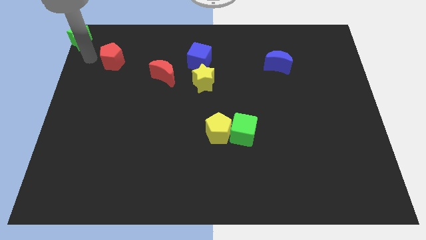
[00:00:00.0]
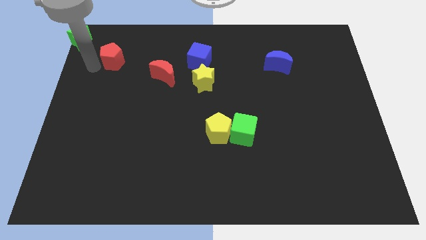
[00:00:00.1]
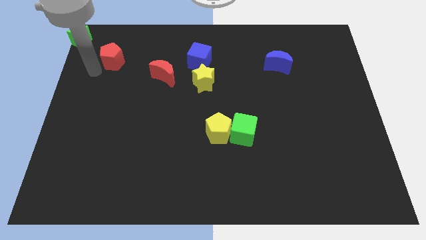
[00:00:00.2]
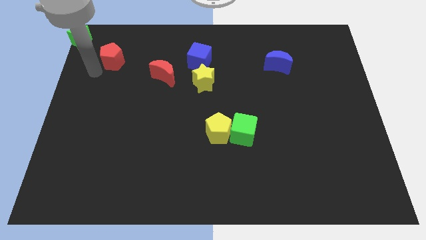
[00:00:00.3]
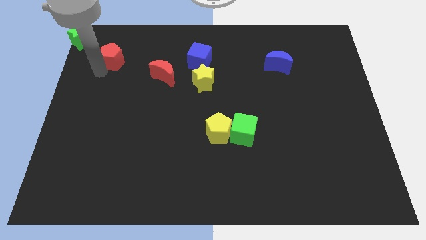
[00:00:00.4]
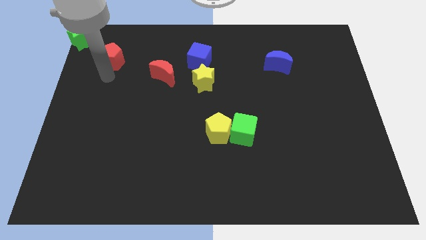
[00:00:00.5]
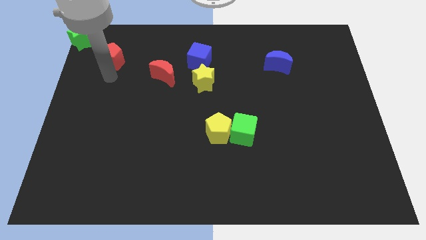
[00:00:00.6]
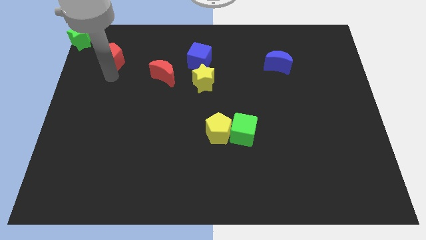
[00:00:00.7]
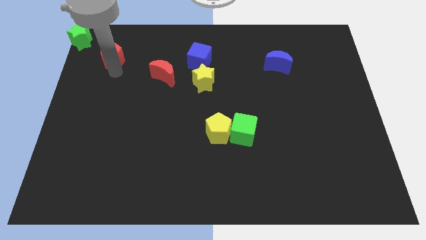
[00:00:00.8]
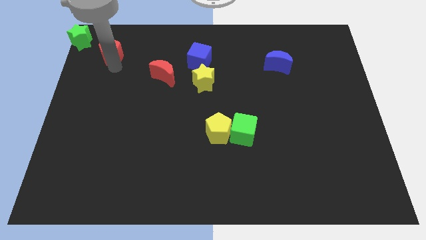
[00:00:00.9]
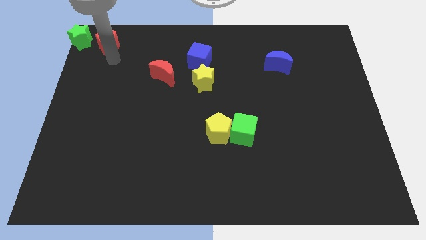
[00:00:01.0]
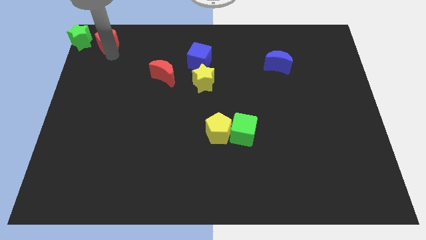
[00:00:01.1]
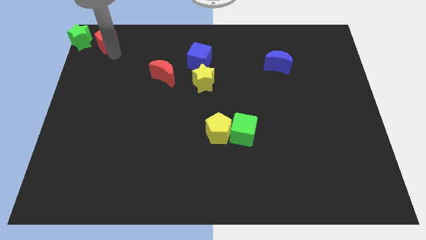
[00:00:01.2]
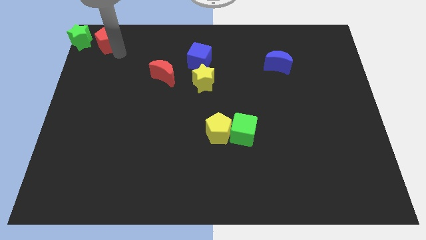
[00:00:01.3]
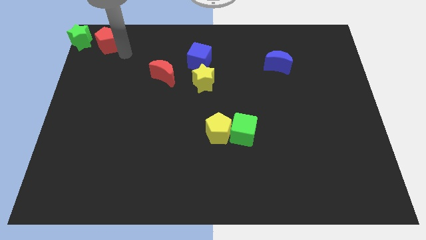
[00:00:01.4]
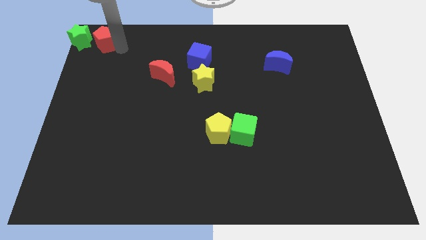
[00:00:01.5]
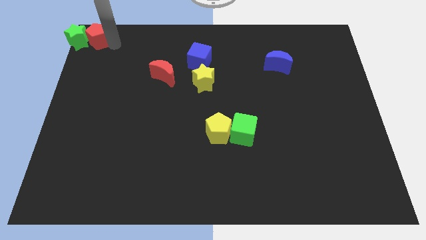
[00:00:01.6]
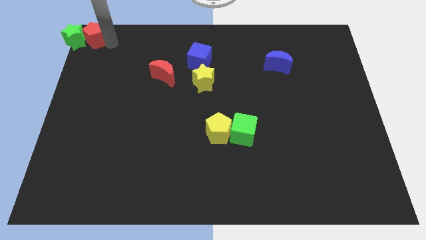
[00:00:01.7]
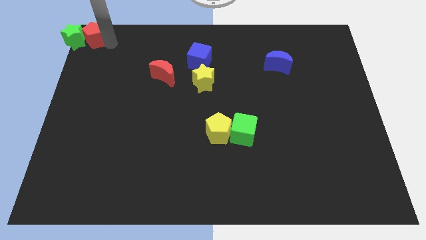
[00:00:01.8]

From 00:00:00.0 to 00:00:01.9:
push the red pentagon right beside the green star

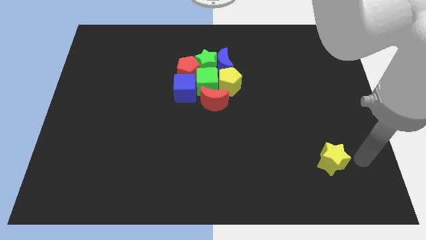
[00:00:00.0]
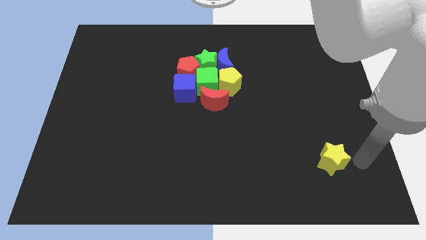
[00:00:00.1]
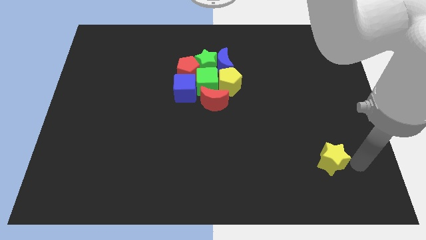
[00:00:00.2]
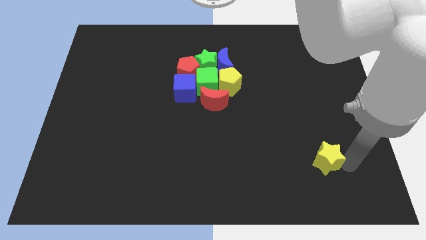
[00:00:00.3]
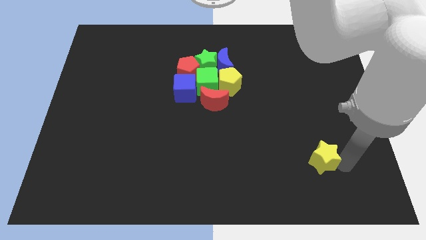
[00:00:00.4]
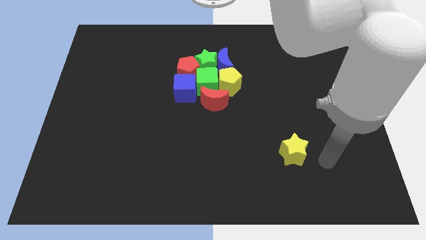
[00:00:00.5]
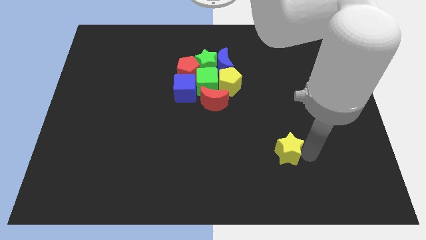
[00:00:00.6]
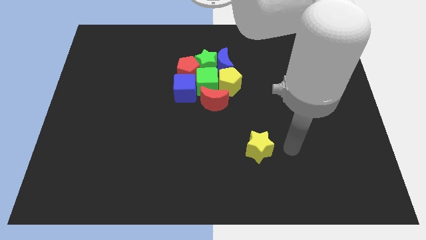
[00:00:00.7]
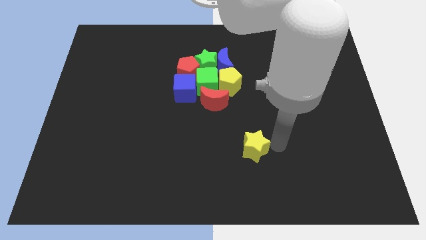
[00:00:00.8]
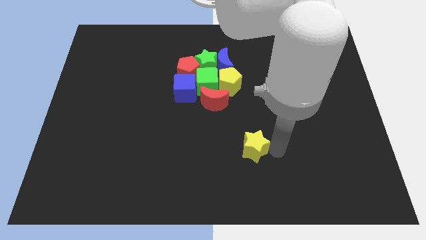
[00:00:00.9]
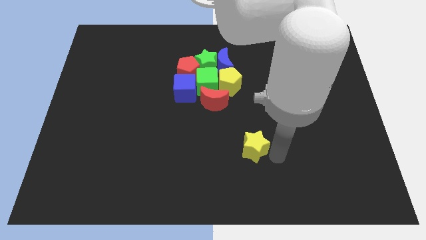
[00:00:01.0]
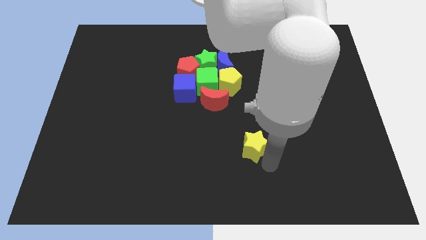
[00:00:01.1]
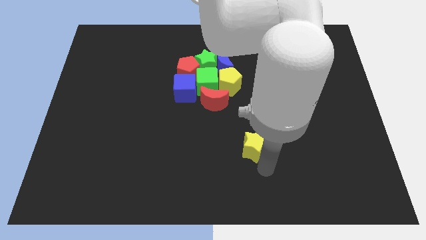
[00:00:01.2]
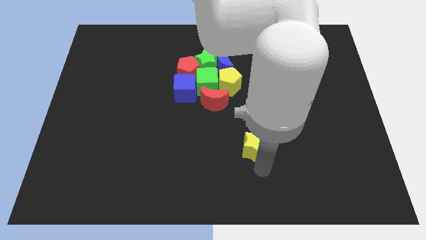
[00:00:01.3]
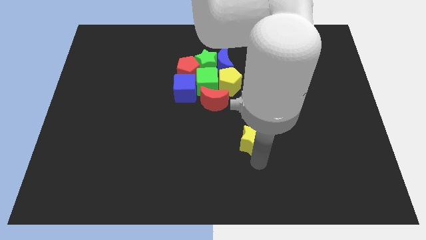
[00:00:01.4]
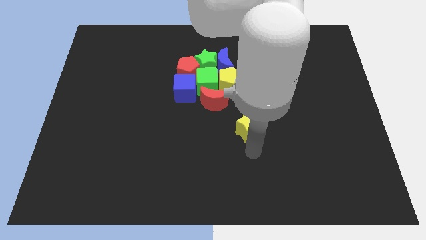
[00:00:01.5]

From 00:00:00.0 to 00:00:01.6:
move the yellow star towards the red crescent

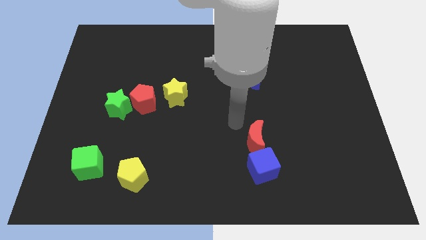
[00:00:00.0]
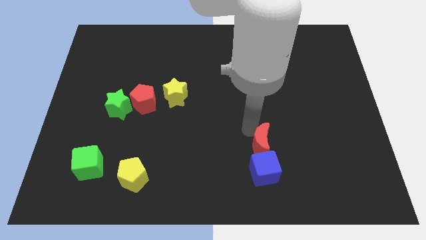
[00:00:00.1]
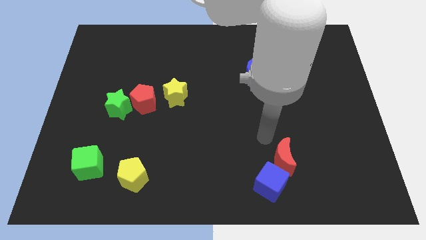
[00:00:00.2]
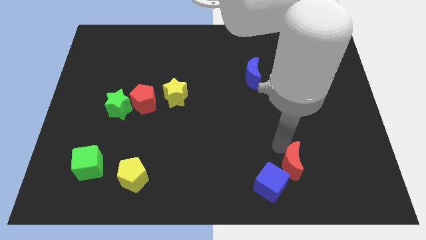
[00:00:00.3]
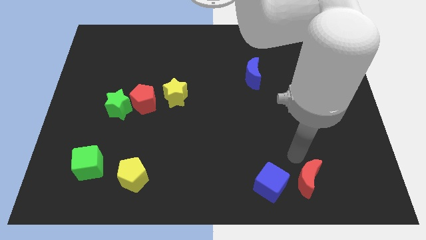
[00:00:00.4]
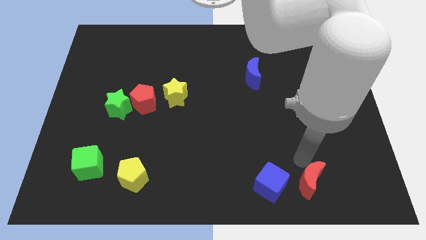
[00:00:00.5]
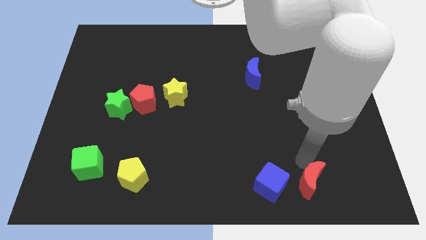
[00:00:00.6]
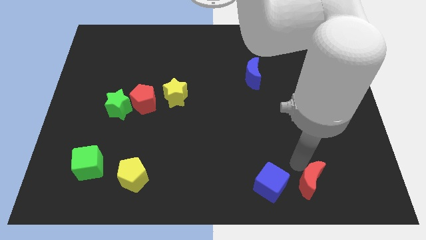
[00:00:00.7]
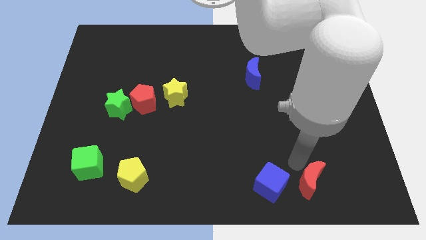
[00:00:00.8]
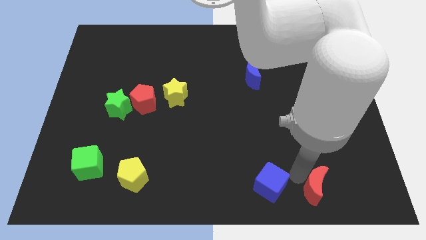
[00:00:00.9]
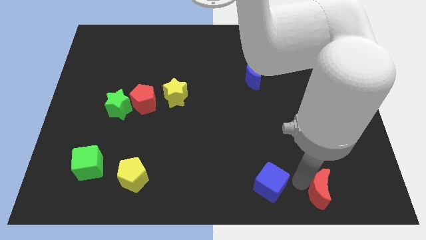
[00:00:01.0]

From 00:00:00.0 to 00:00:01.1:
move the red crescent to the right of the blue cube

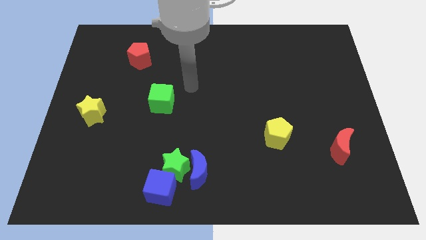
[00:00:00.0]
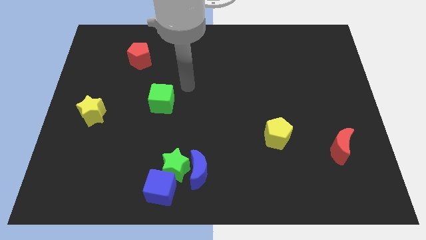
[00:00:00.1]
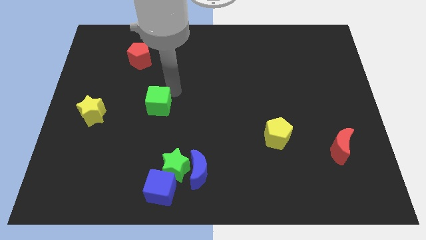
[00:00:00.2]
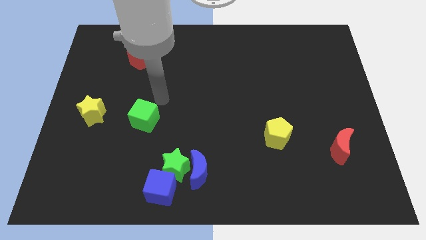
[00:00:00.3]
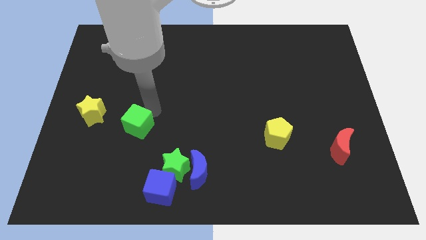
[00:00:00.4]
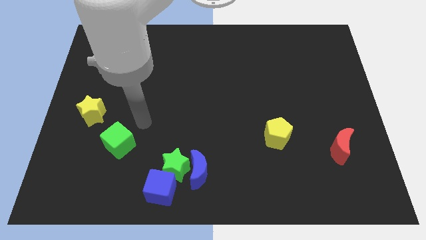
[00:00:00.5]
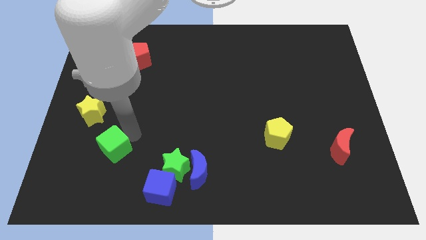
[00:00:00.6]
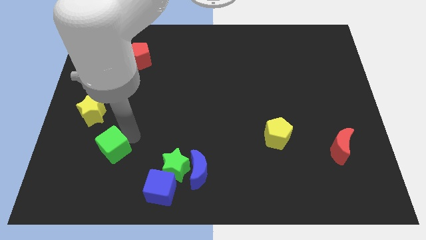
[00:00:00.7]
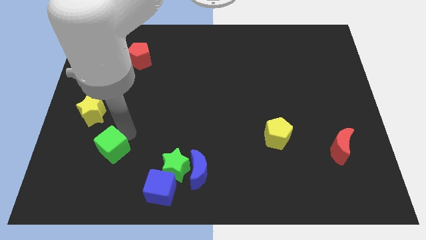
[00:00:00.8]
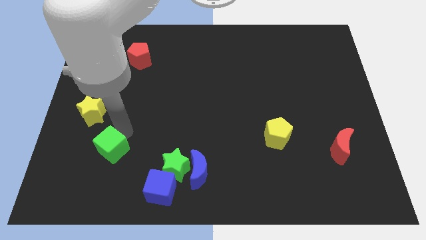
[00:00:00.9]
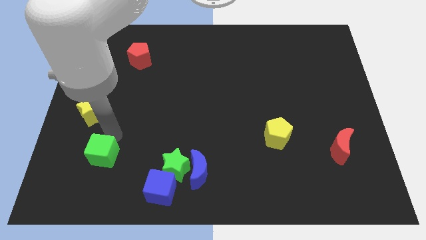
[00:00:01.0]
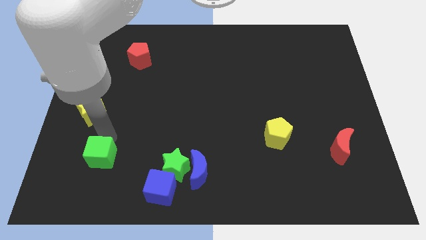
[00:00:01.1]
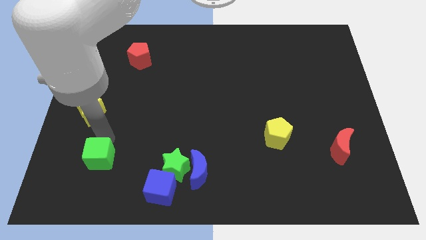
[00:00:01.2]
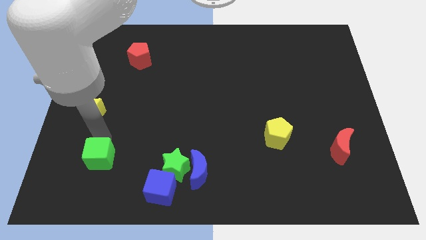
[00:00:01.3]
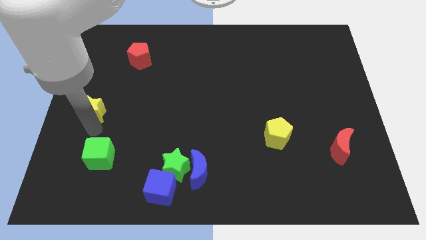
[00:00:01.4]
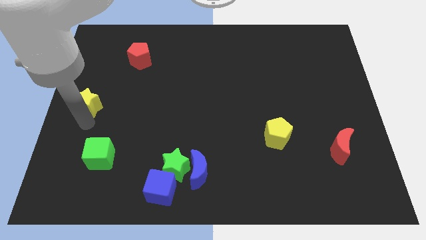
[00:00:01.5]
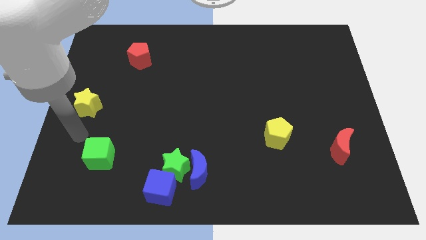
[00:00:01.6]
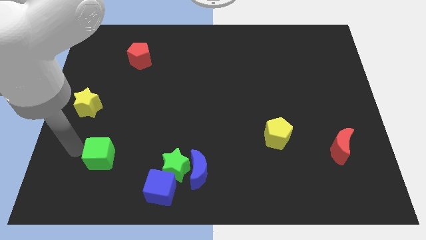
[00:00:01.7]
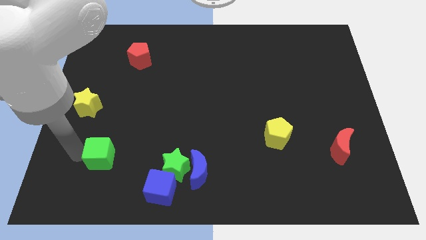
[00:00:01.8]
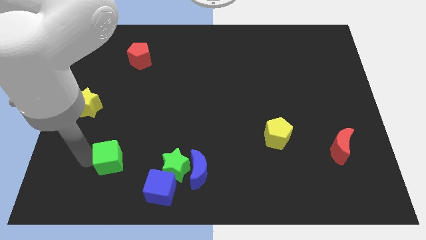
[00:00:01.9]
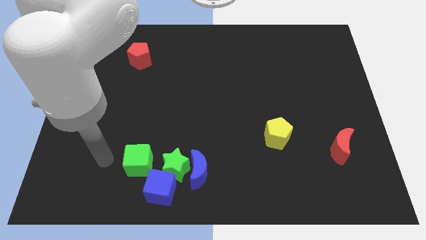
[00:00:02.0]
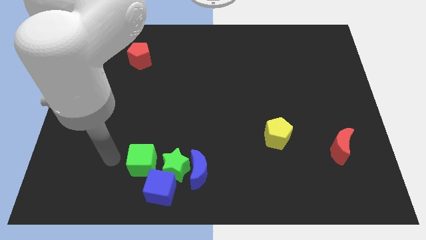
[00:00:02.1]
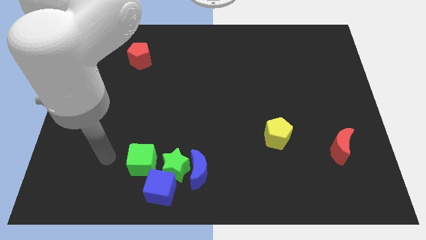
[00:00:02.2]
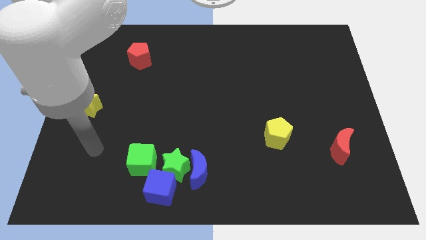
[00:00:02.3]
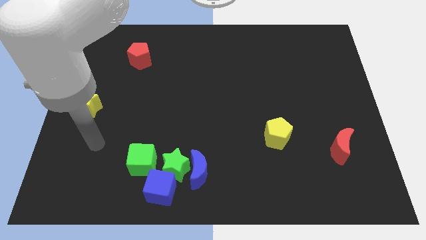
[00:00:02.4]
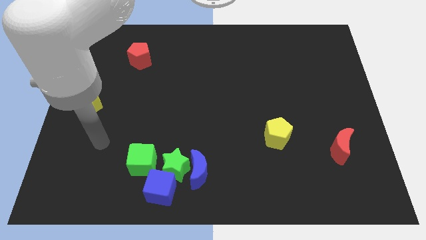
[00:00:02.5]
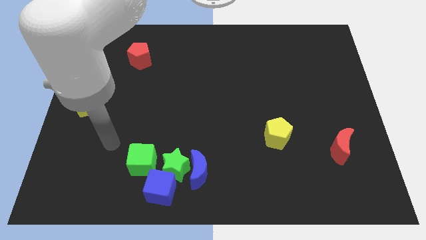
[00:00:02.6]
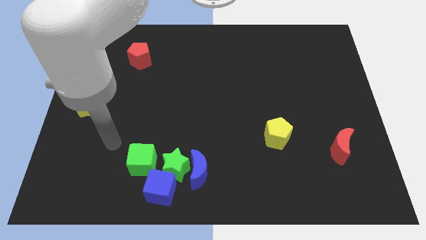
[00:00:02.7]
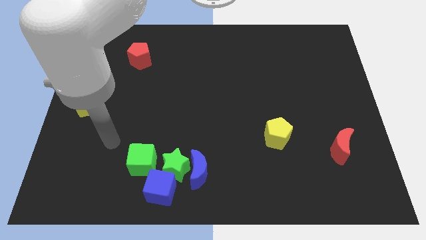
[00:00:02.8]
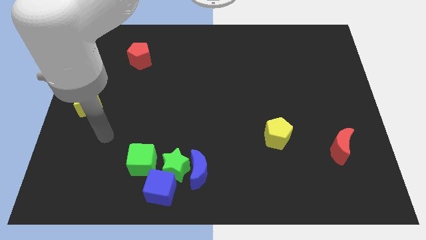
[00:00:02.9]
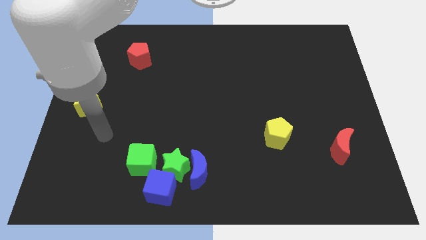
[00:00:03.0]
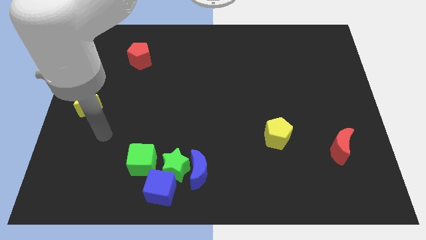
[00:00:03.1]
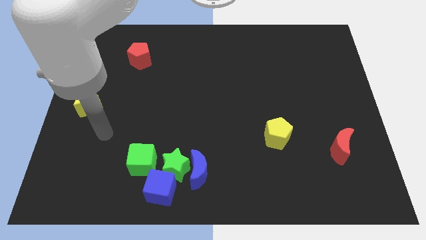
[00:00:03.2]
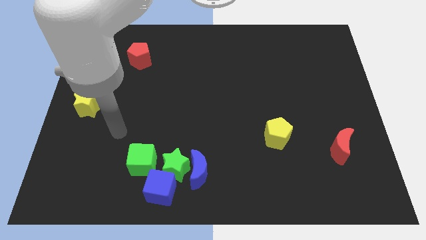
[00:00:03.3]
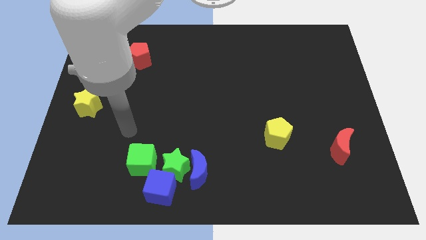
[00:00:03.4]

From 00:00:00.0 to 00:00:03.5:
move the green cube to the bottom center of the board

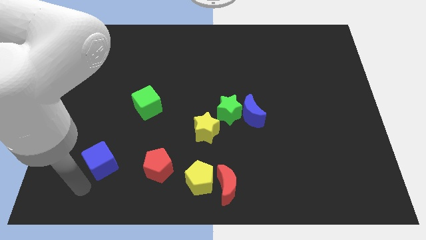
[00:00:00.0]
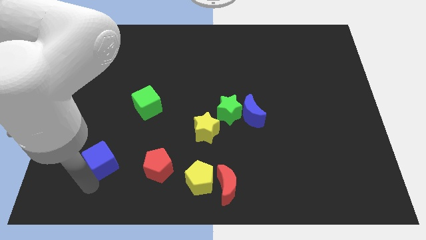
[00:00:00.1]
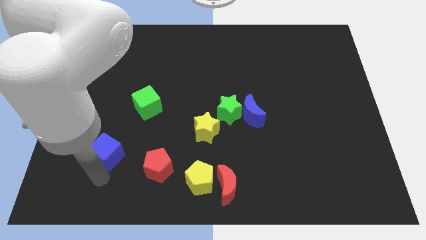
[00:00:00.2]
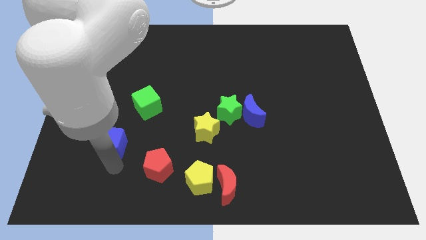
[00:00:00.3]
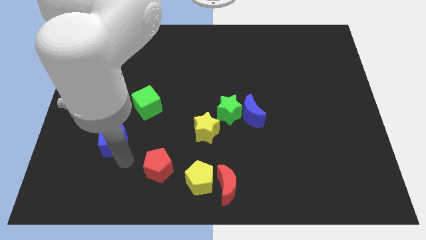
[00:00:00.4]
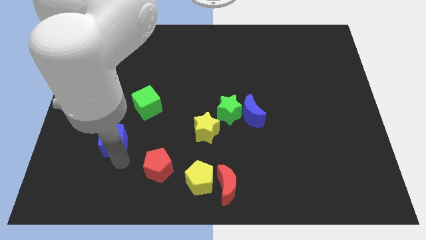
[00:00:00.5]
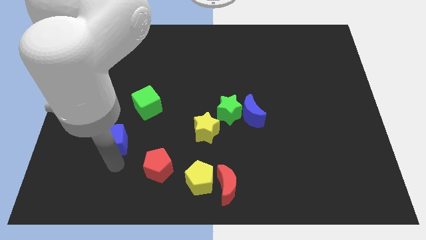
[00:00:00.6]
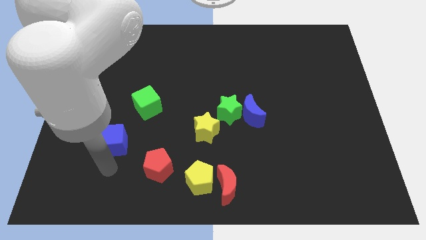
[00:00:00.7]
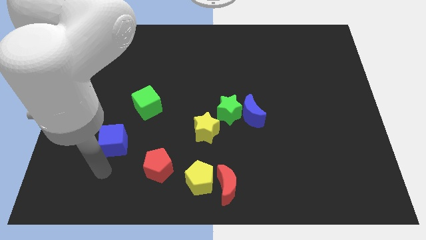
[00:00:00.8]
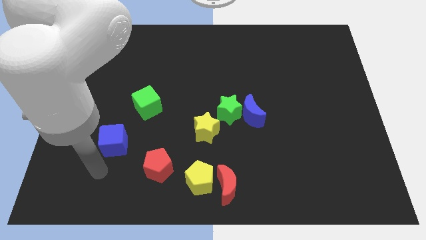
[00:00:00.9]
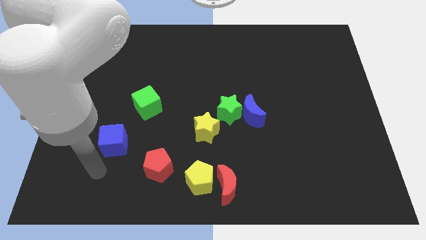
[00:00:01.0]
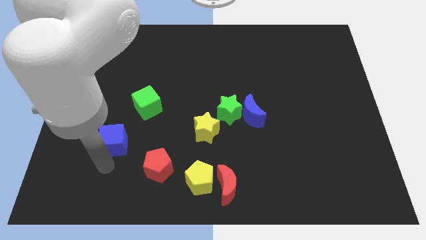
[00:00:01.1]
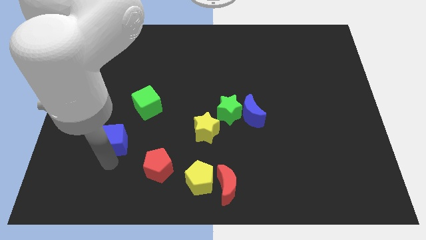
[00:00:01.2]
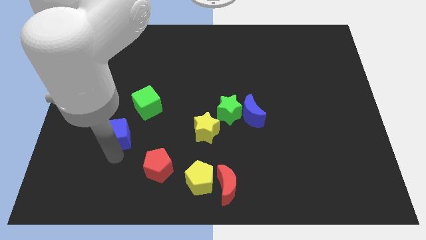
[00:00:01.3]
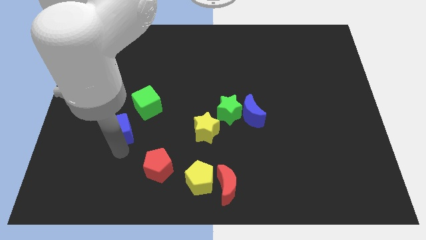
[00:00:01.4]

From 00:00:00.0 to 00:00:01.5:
push the blue cube to the left of the yellow star
